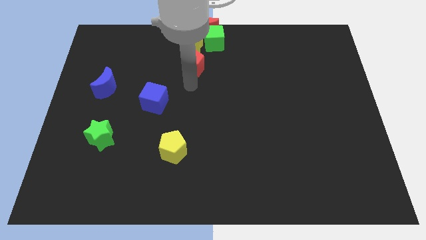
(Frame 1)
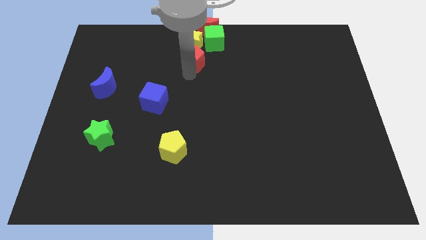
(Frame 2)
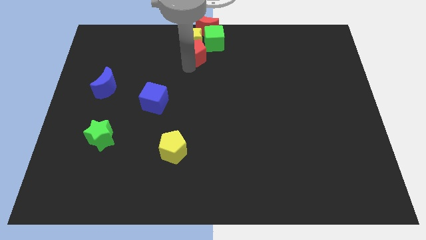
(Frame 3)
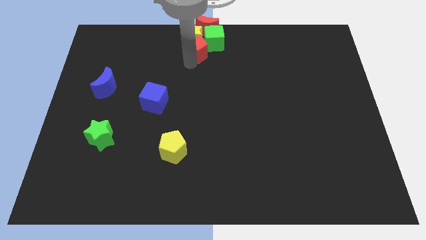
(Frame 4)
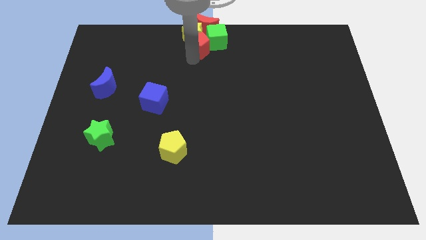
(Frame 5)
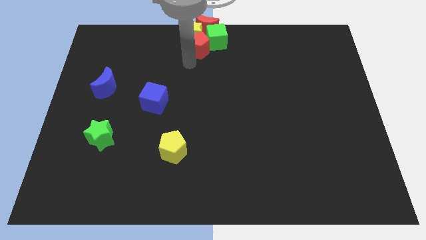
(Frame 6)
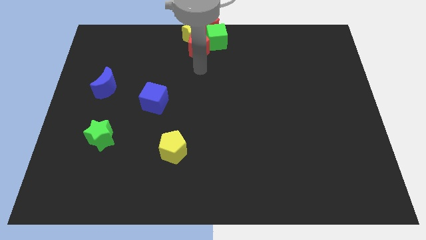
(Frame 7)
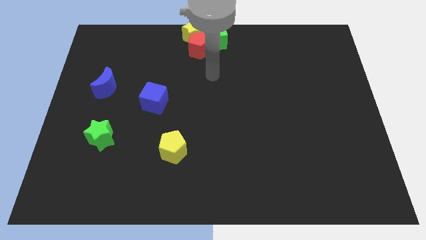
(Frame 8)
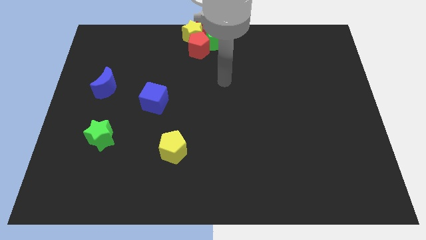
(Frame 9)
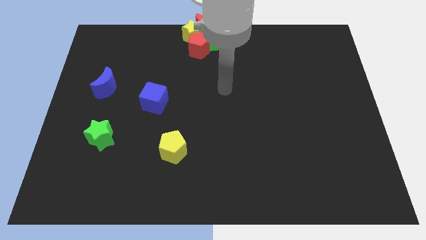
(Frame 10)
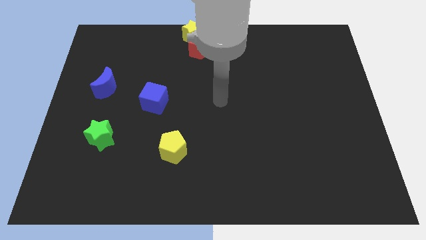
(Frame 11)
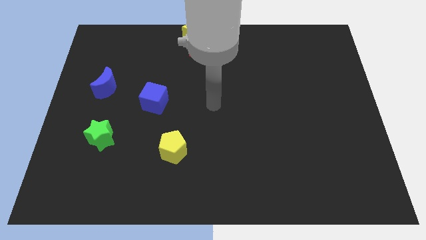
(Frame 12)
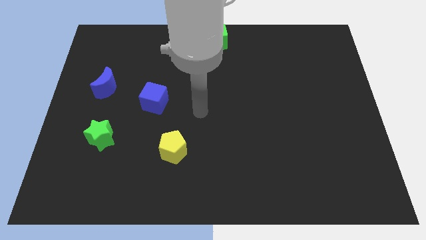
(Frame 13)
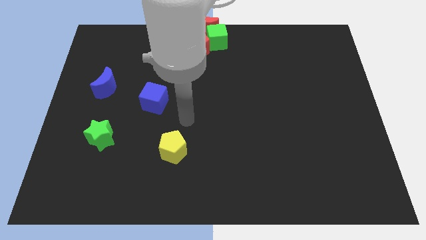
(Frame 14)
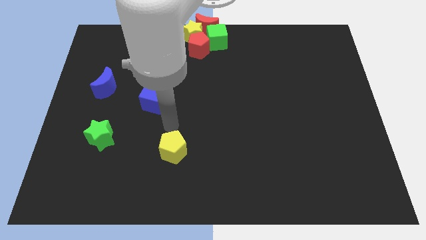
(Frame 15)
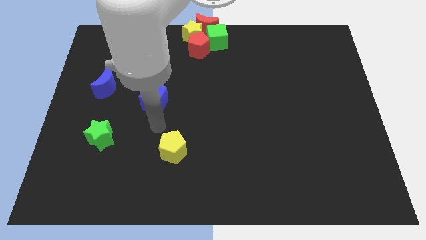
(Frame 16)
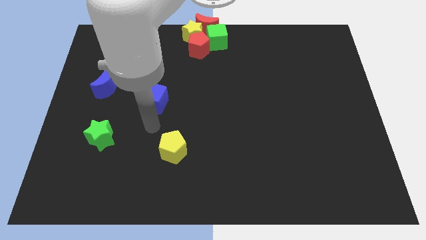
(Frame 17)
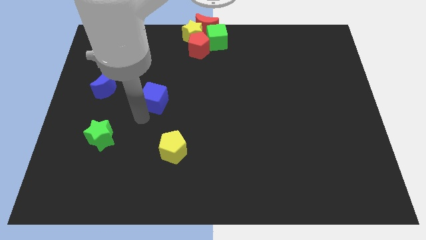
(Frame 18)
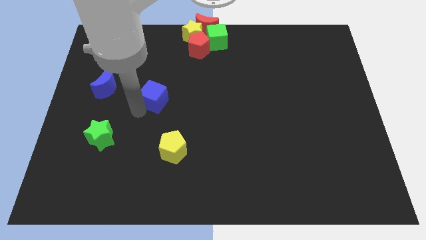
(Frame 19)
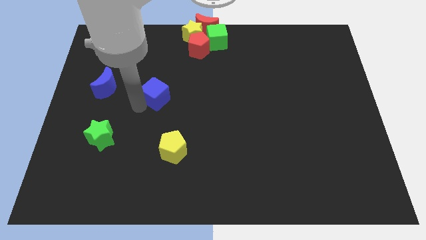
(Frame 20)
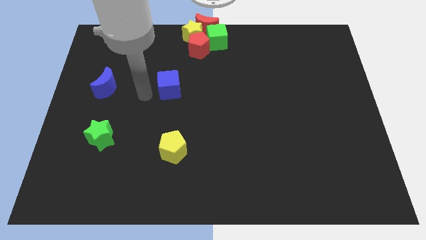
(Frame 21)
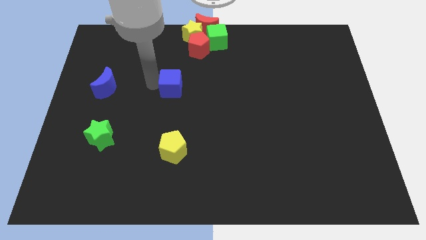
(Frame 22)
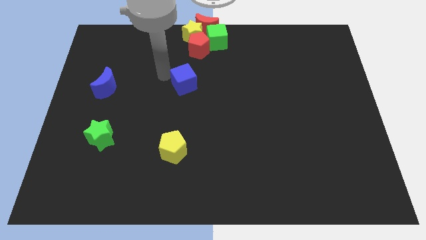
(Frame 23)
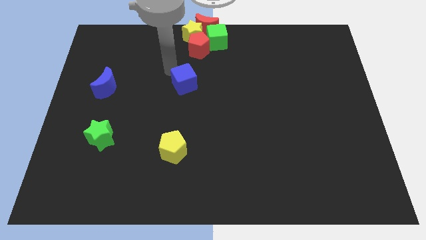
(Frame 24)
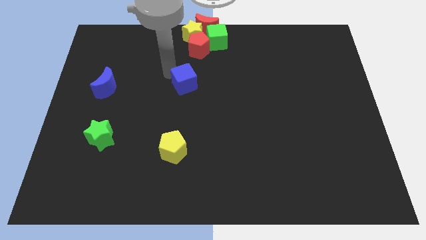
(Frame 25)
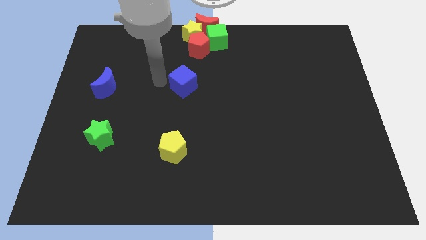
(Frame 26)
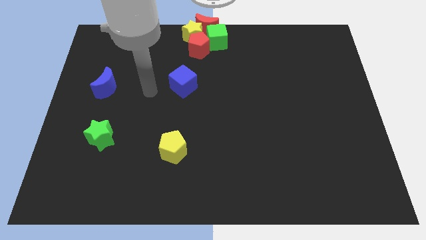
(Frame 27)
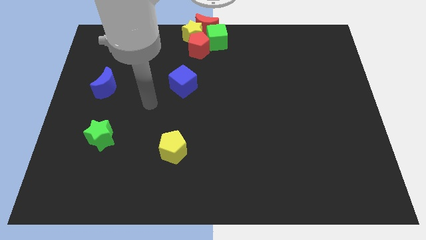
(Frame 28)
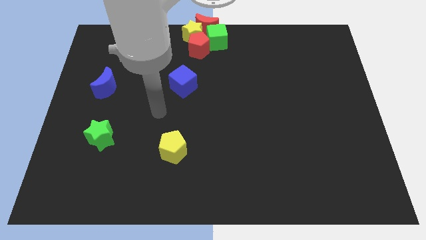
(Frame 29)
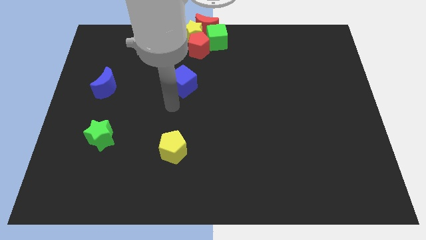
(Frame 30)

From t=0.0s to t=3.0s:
push red pentagon into yellow star

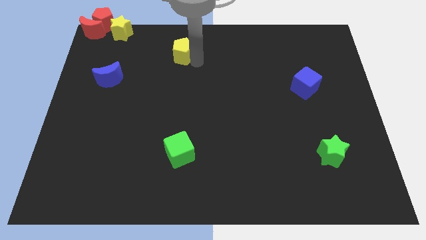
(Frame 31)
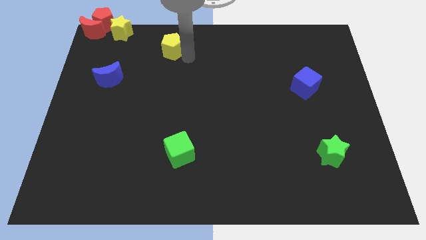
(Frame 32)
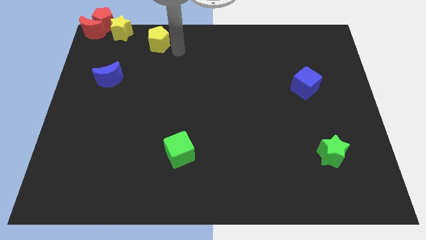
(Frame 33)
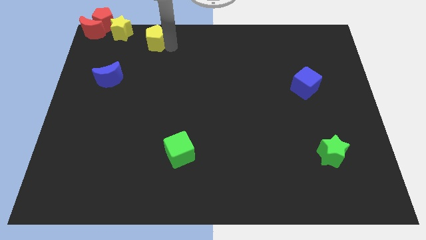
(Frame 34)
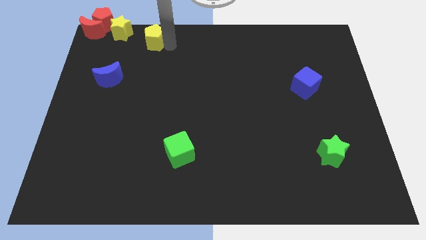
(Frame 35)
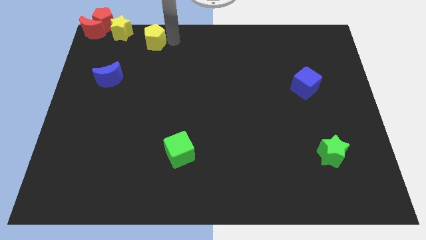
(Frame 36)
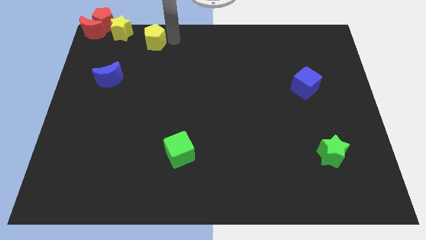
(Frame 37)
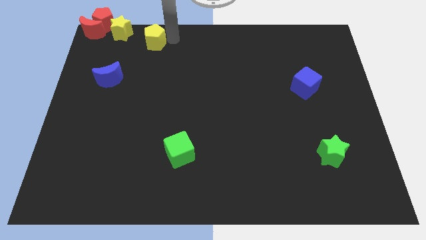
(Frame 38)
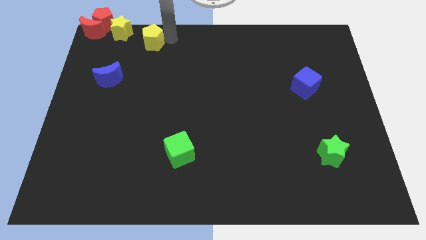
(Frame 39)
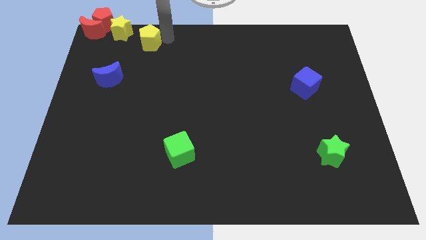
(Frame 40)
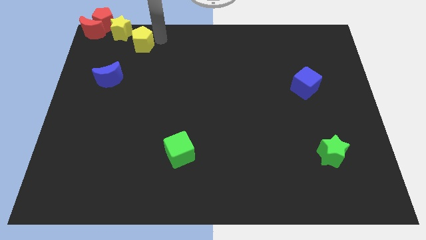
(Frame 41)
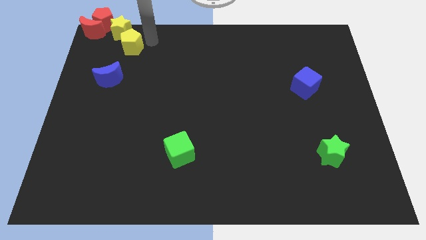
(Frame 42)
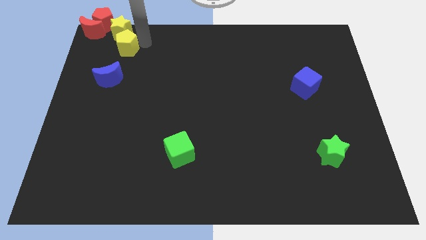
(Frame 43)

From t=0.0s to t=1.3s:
place the yellow pentagon diagonally bottom right to yellow star

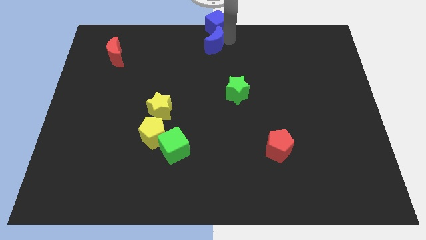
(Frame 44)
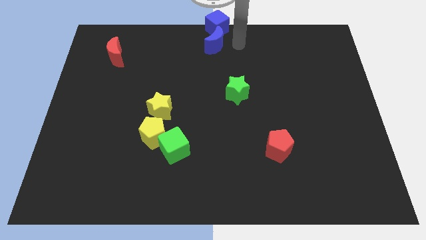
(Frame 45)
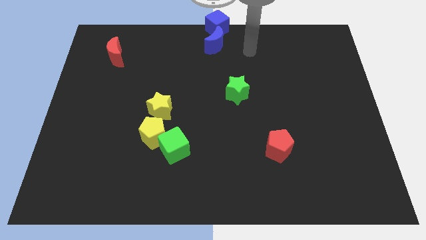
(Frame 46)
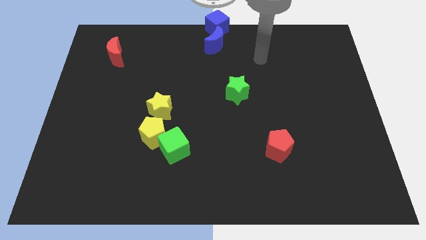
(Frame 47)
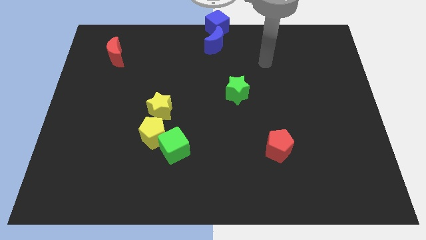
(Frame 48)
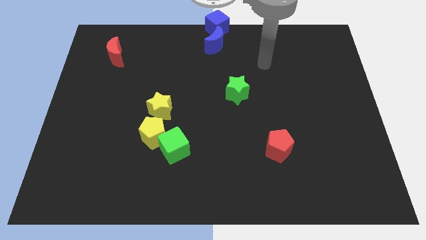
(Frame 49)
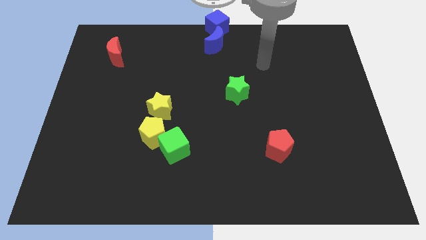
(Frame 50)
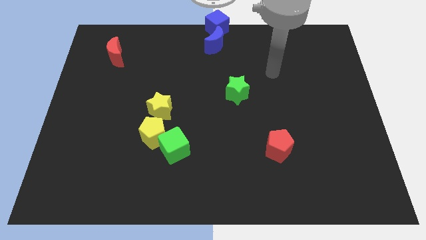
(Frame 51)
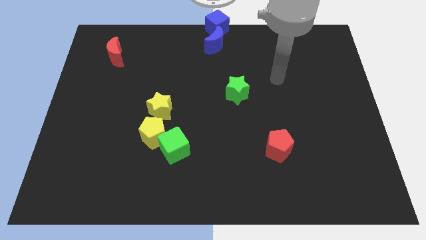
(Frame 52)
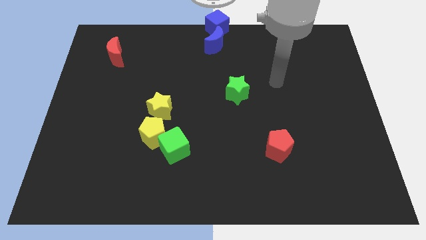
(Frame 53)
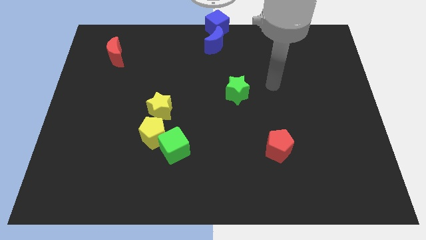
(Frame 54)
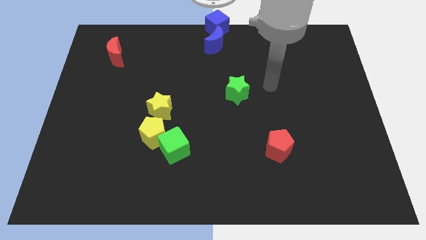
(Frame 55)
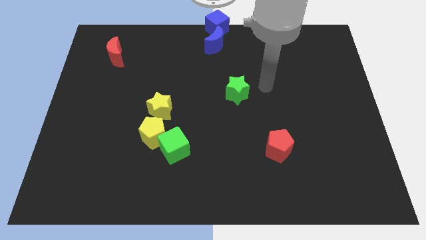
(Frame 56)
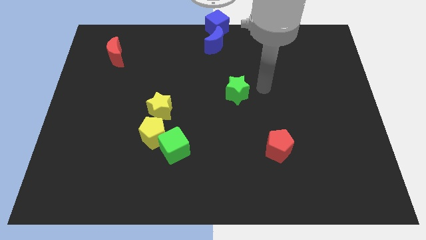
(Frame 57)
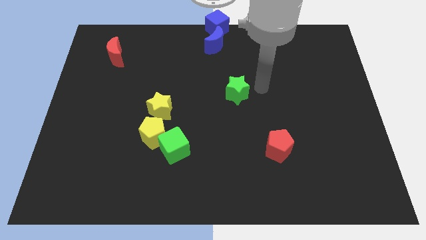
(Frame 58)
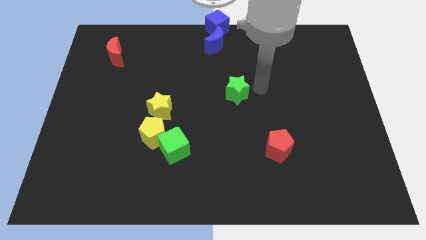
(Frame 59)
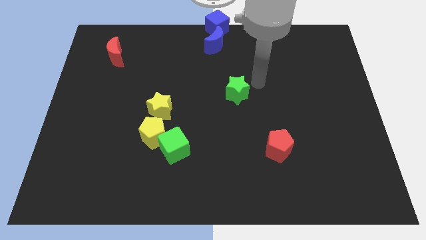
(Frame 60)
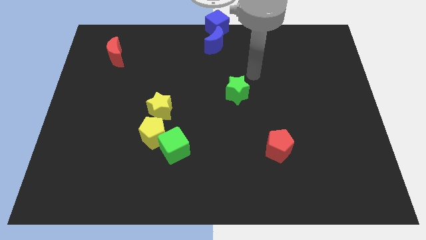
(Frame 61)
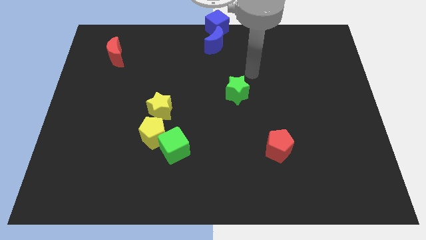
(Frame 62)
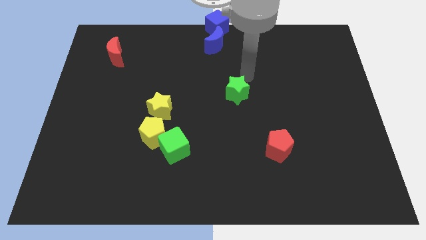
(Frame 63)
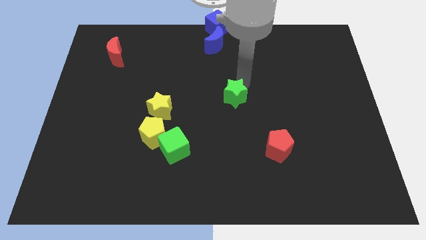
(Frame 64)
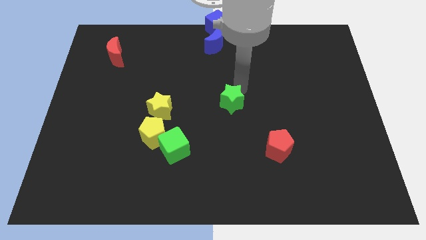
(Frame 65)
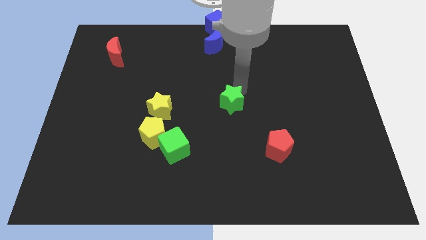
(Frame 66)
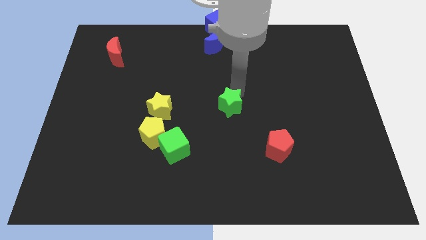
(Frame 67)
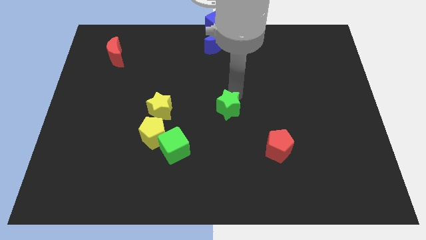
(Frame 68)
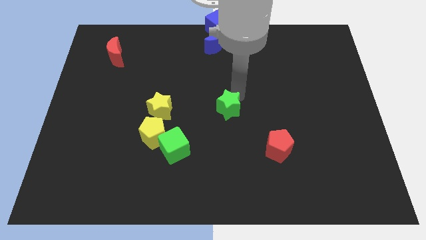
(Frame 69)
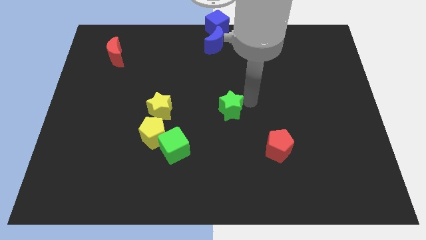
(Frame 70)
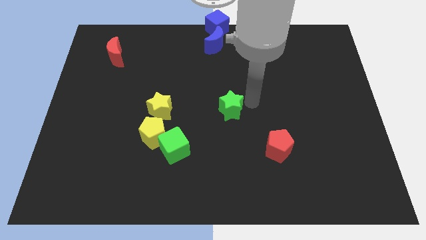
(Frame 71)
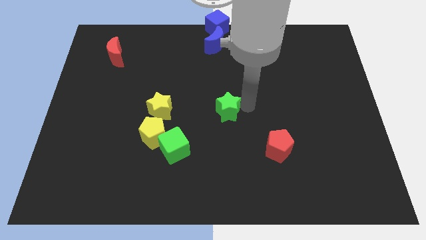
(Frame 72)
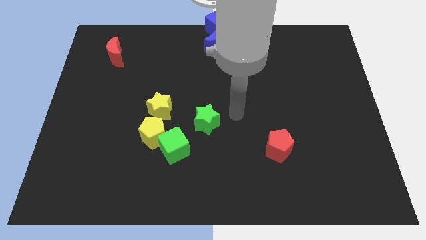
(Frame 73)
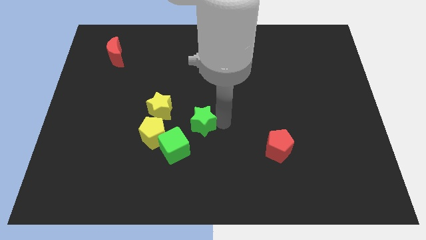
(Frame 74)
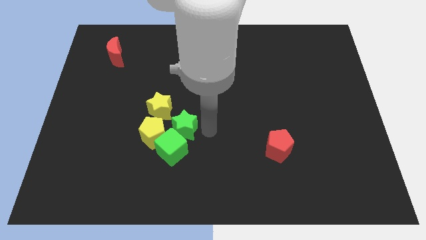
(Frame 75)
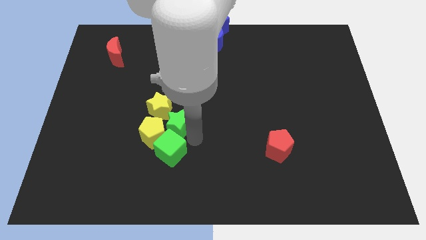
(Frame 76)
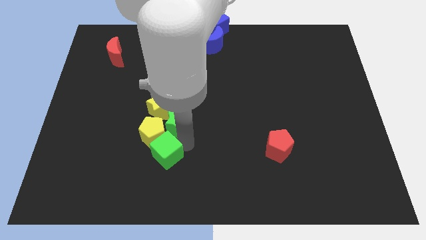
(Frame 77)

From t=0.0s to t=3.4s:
move the green star right to the yellow pentagon

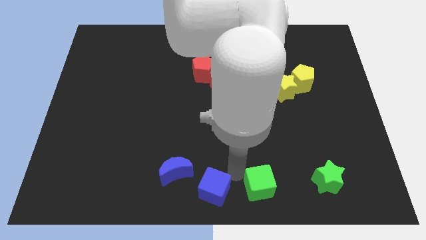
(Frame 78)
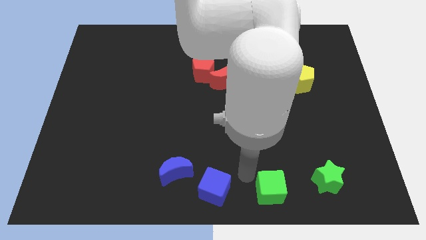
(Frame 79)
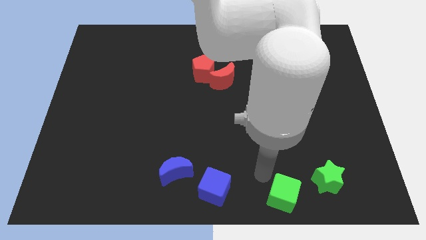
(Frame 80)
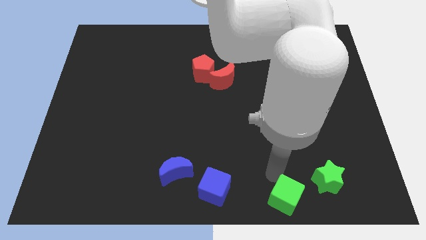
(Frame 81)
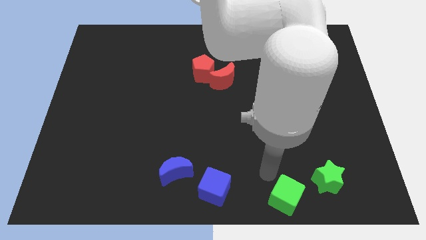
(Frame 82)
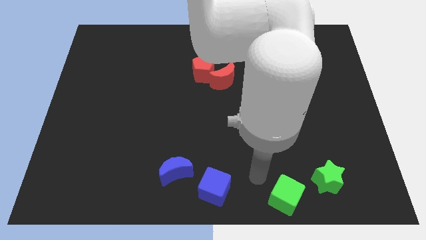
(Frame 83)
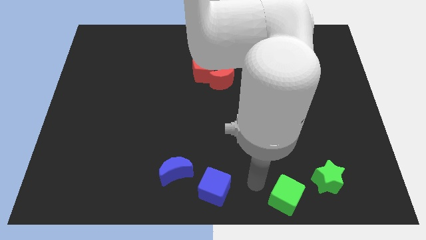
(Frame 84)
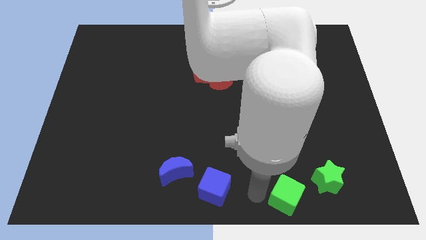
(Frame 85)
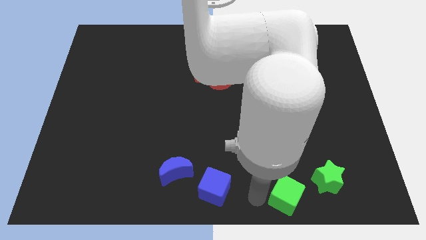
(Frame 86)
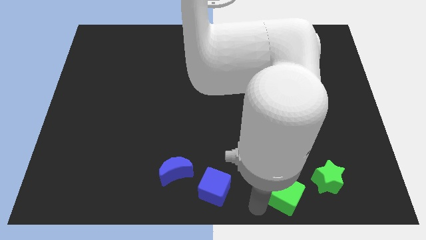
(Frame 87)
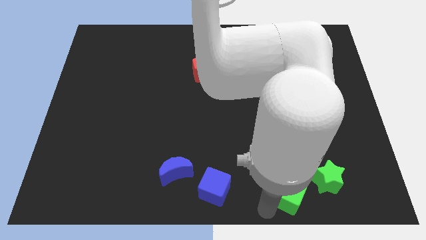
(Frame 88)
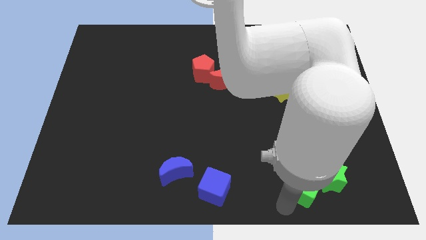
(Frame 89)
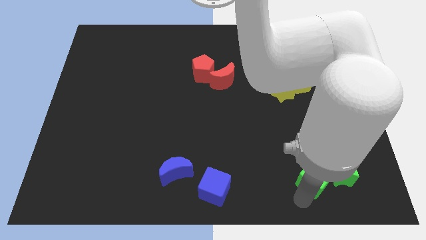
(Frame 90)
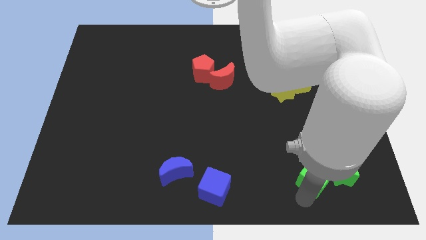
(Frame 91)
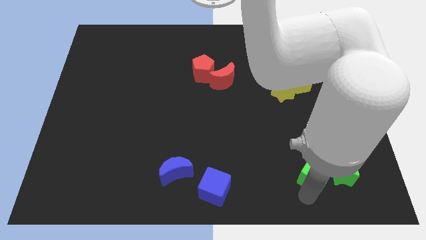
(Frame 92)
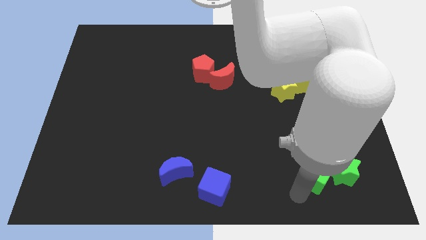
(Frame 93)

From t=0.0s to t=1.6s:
push the green cube into the green star
